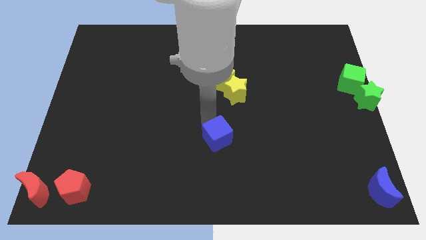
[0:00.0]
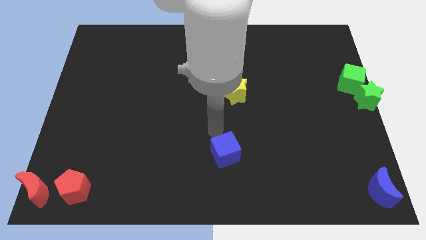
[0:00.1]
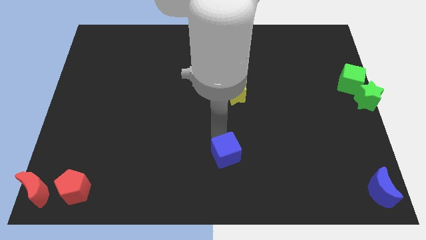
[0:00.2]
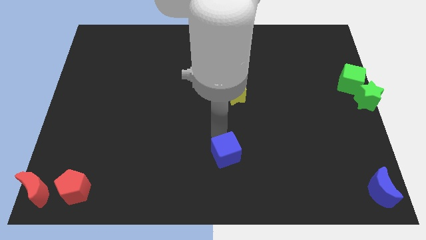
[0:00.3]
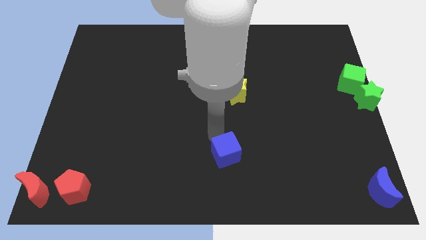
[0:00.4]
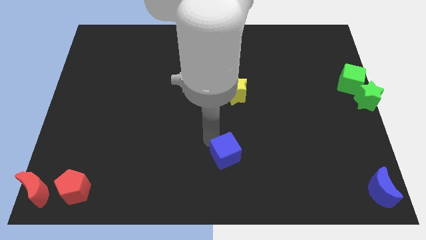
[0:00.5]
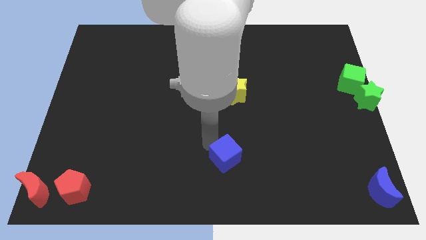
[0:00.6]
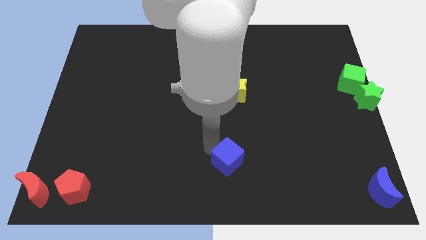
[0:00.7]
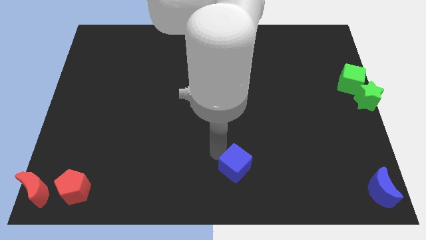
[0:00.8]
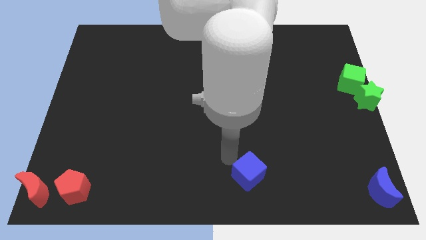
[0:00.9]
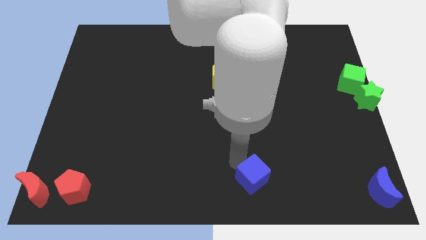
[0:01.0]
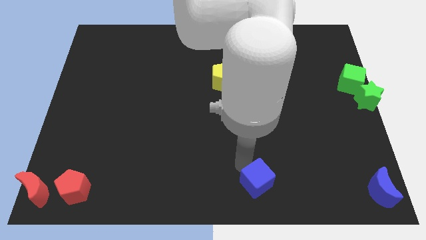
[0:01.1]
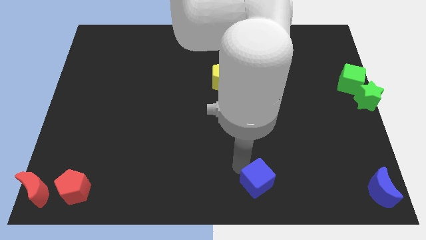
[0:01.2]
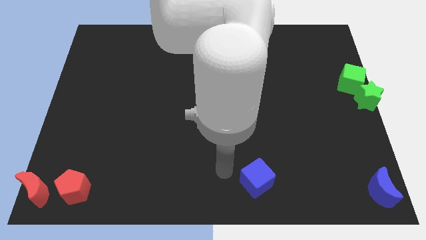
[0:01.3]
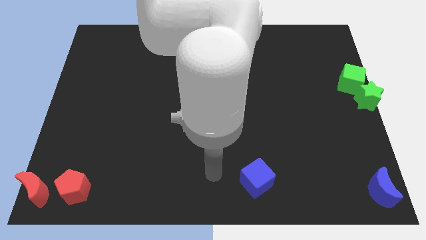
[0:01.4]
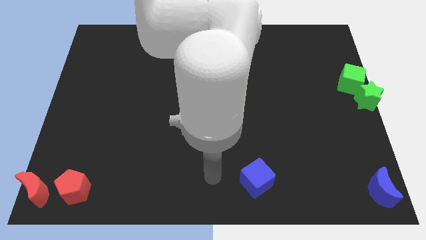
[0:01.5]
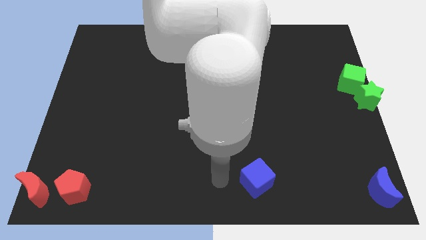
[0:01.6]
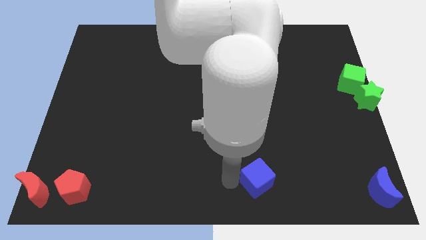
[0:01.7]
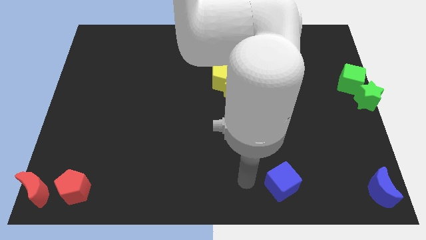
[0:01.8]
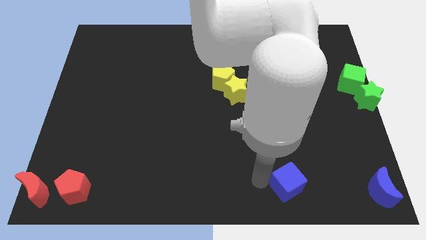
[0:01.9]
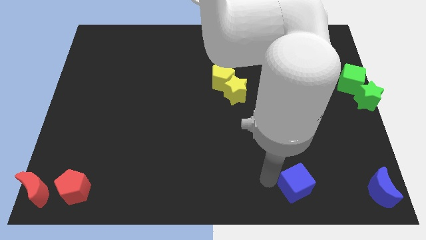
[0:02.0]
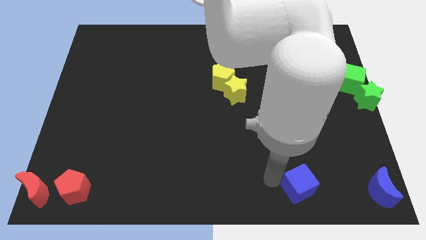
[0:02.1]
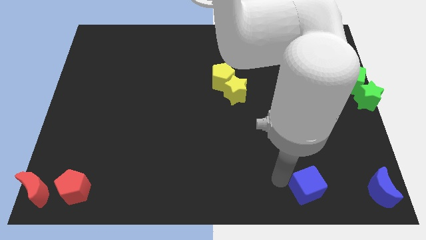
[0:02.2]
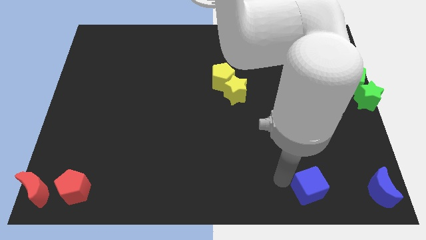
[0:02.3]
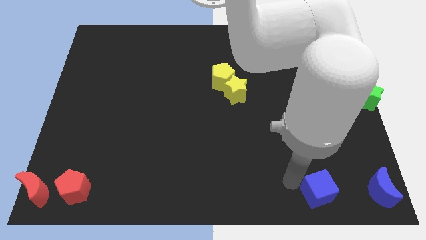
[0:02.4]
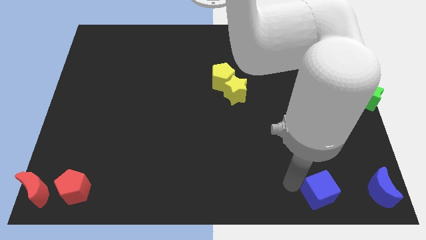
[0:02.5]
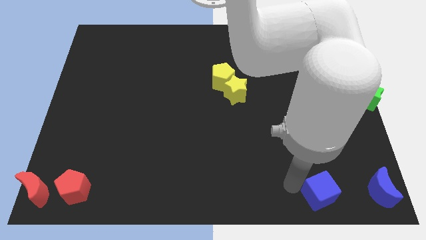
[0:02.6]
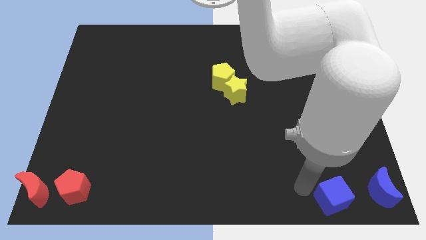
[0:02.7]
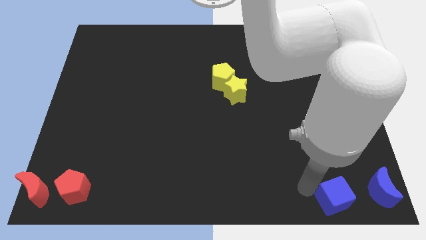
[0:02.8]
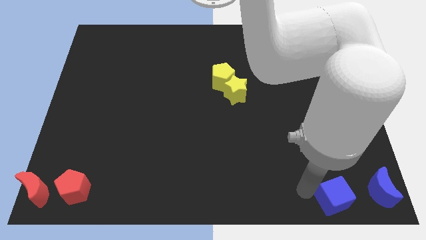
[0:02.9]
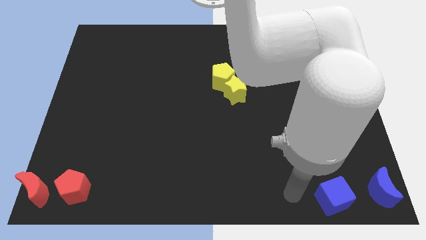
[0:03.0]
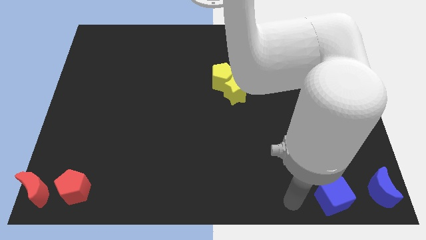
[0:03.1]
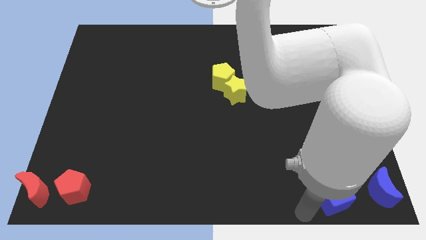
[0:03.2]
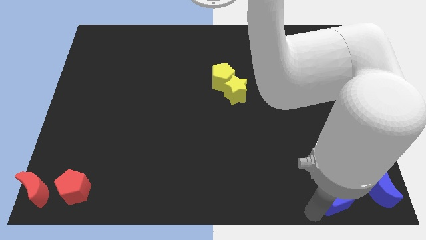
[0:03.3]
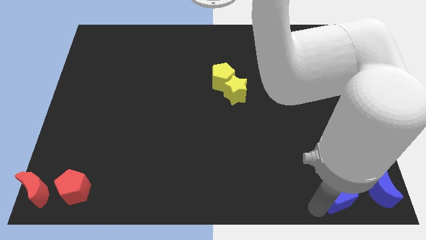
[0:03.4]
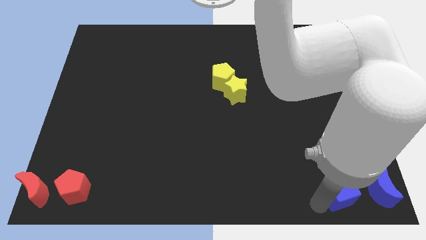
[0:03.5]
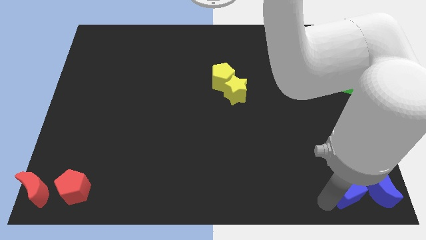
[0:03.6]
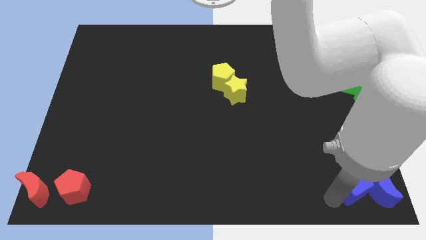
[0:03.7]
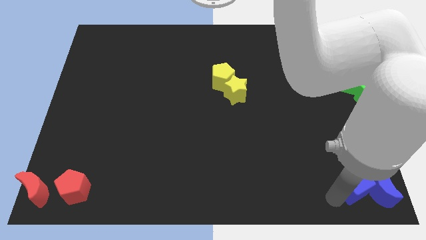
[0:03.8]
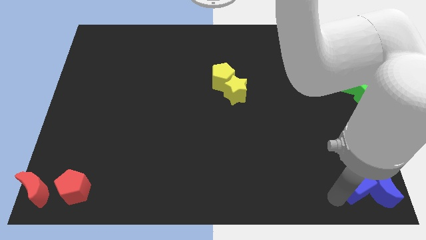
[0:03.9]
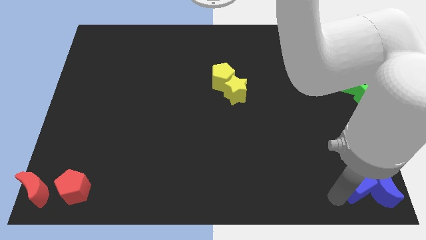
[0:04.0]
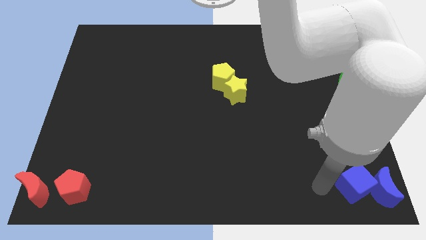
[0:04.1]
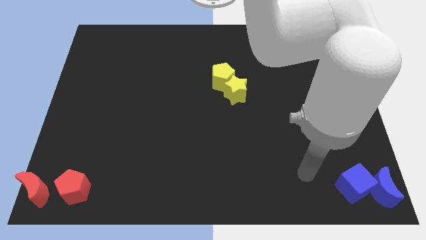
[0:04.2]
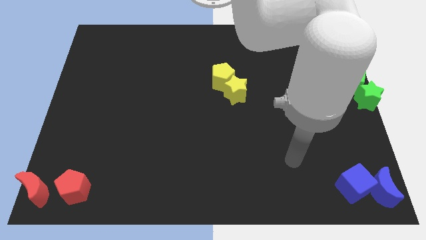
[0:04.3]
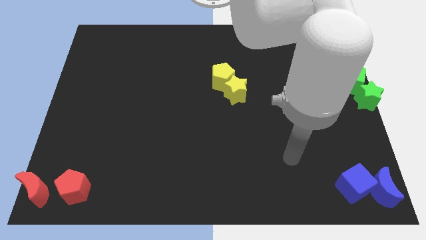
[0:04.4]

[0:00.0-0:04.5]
place the blue cube at the bottom right corner of the board

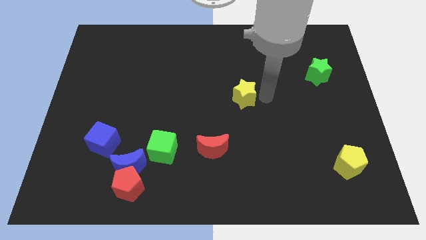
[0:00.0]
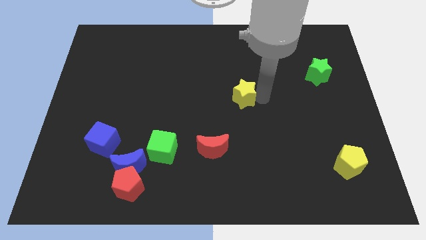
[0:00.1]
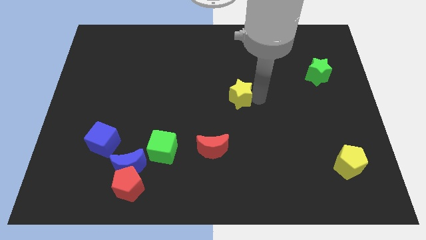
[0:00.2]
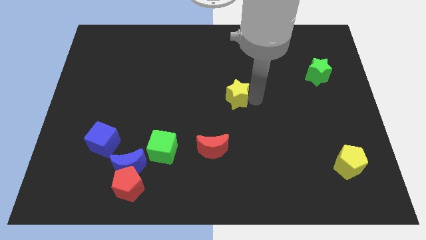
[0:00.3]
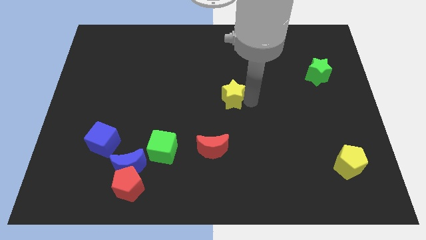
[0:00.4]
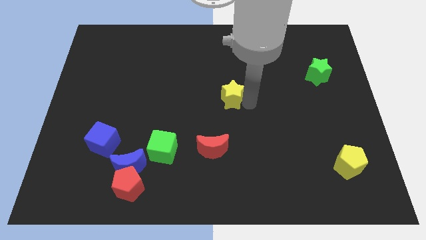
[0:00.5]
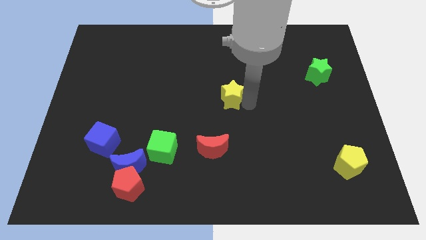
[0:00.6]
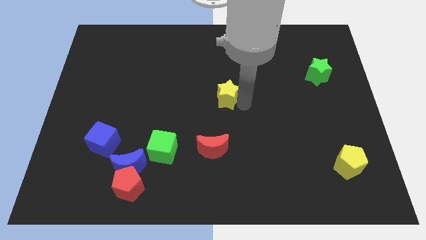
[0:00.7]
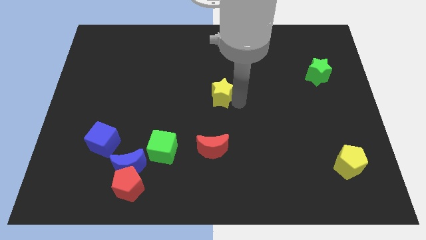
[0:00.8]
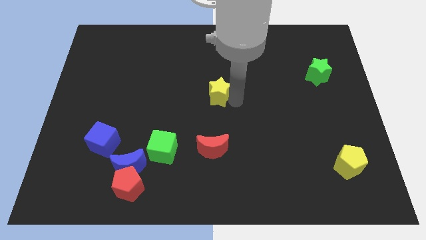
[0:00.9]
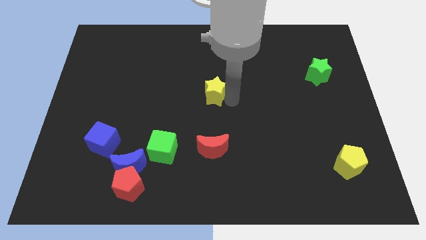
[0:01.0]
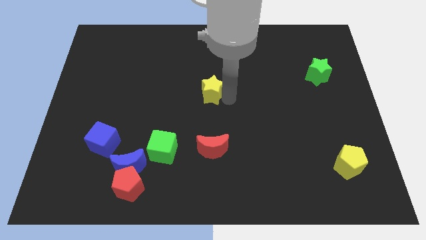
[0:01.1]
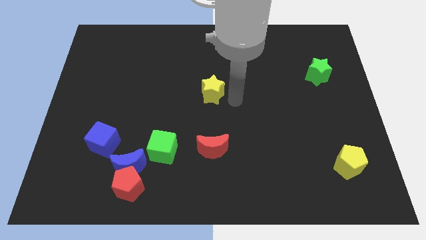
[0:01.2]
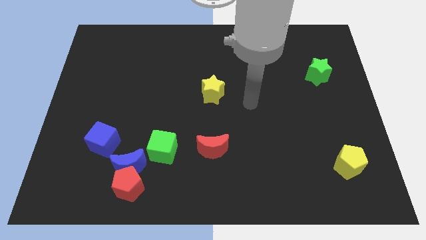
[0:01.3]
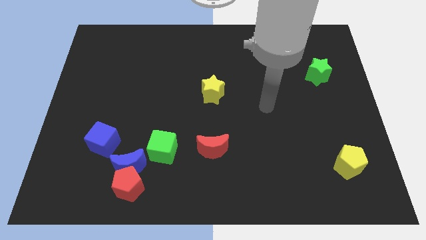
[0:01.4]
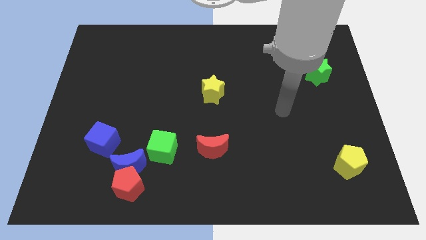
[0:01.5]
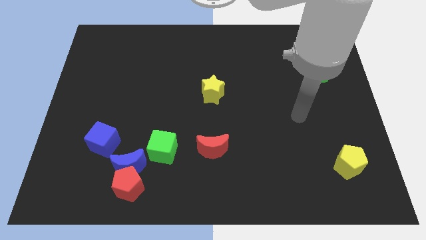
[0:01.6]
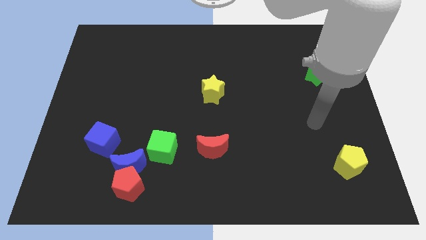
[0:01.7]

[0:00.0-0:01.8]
push the yellow star to the center of the board

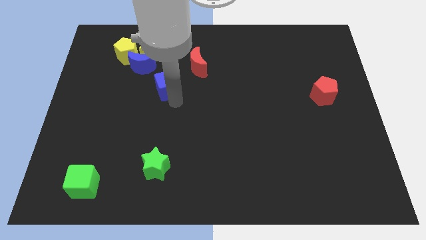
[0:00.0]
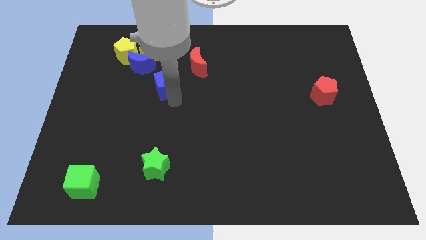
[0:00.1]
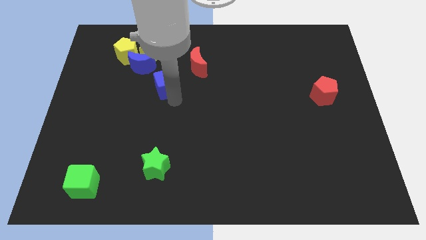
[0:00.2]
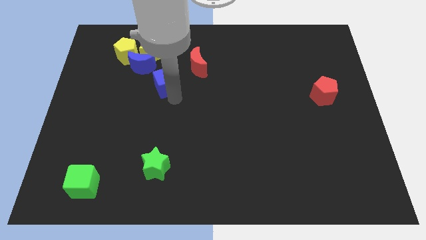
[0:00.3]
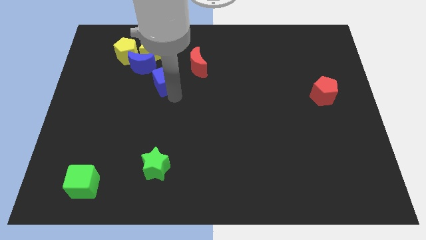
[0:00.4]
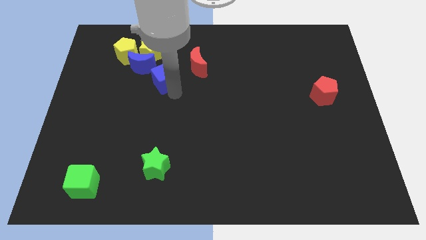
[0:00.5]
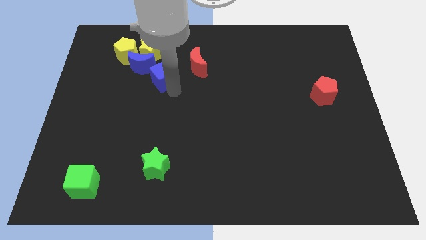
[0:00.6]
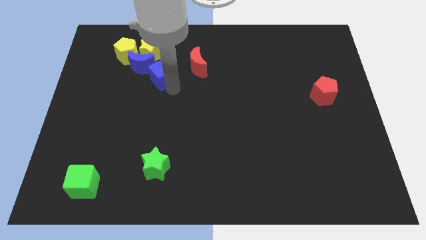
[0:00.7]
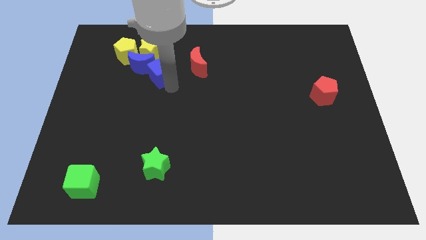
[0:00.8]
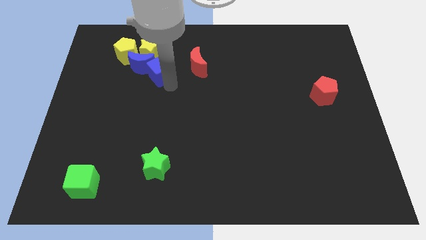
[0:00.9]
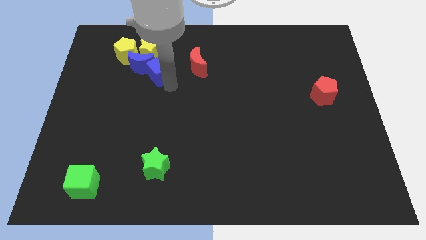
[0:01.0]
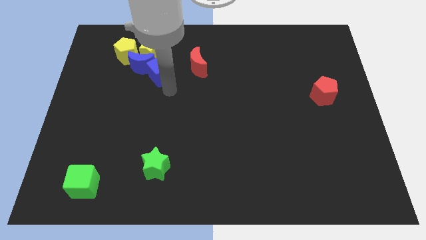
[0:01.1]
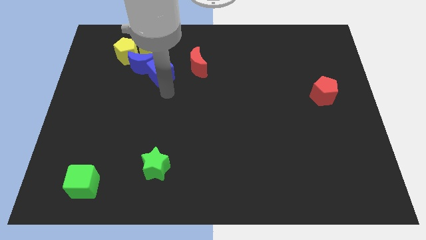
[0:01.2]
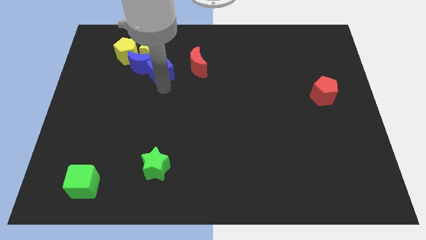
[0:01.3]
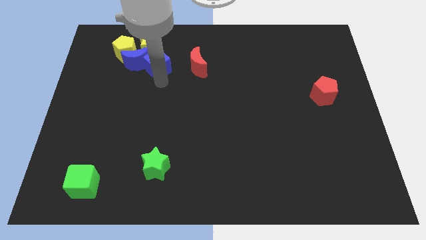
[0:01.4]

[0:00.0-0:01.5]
move blue cube right below the blue moon

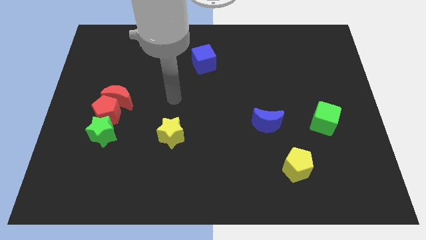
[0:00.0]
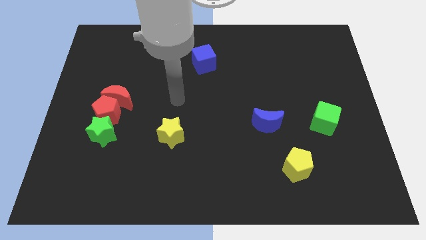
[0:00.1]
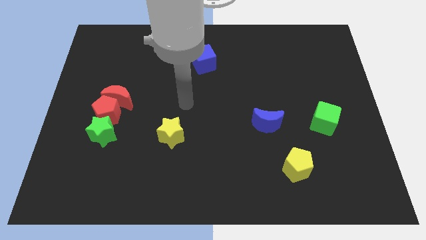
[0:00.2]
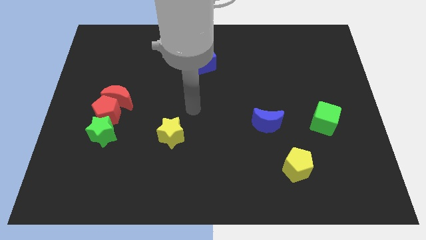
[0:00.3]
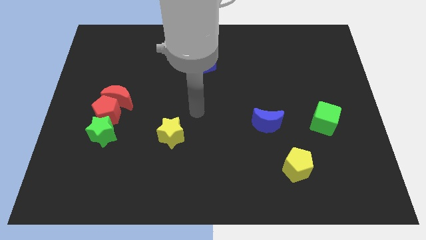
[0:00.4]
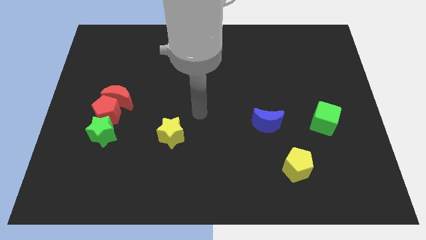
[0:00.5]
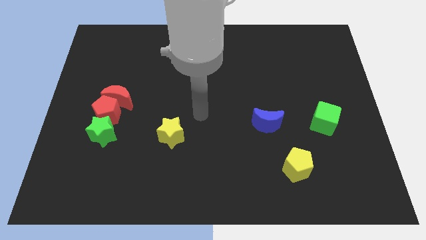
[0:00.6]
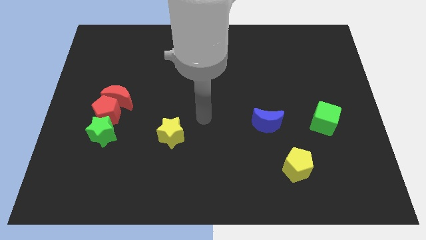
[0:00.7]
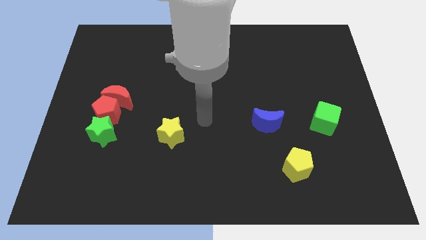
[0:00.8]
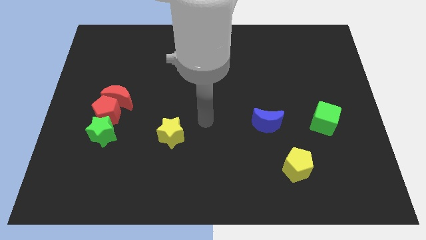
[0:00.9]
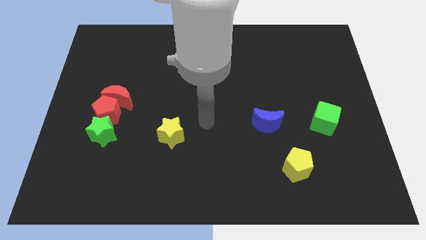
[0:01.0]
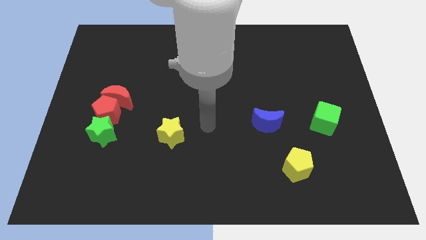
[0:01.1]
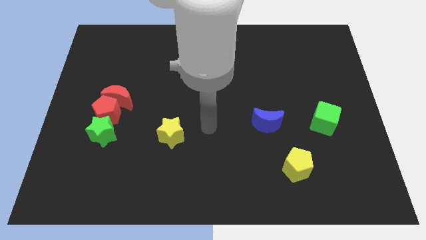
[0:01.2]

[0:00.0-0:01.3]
push your arm in between the yellow star and blue crescent
